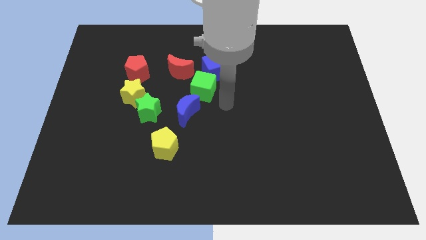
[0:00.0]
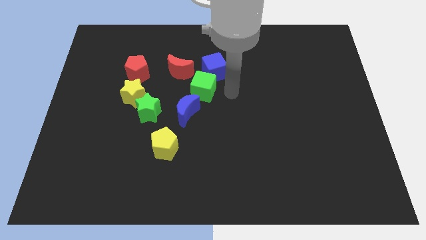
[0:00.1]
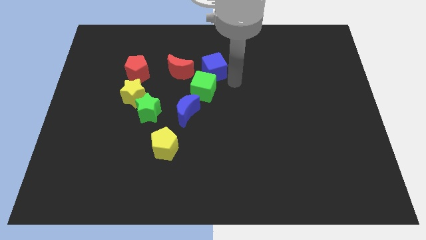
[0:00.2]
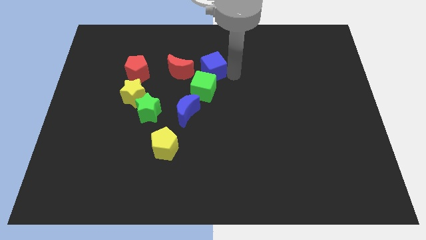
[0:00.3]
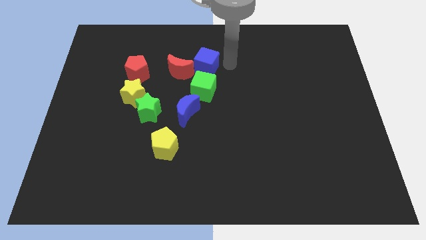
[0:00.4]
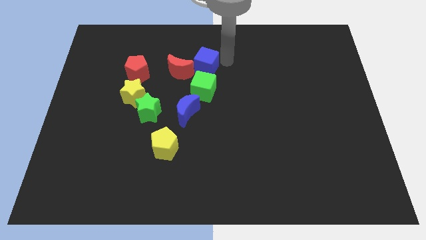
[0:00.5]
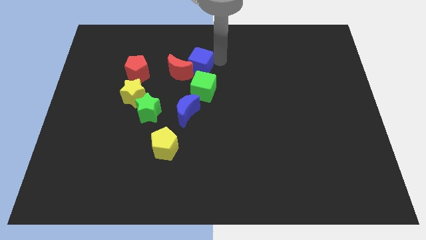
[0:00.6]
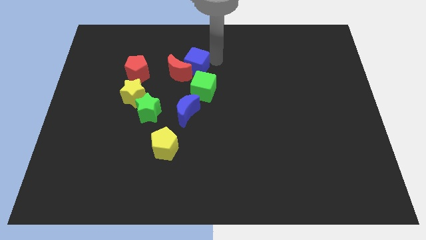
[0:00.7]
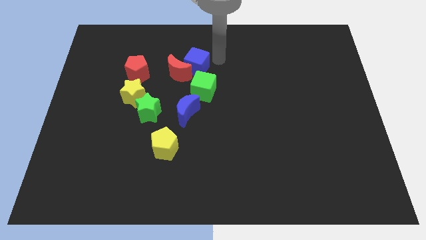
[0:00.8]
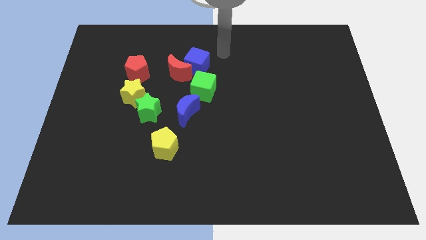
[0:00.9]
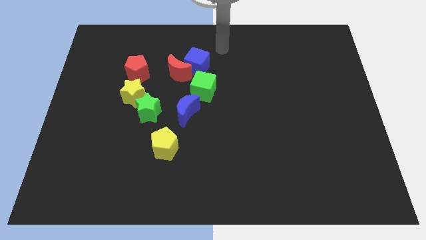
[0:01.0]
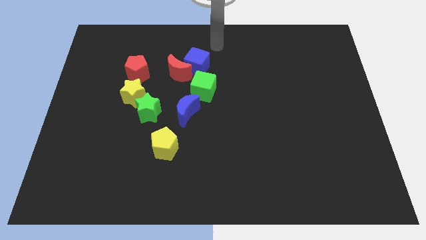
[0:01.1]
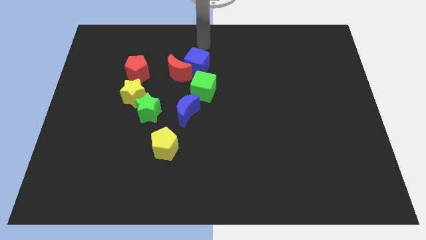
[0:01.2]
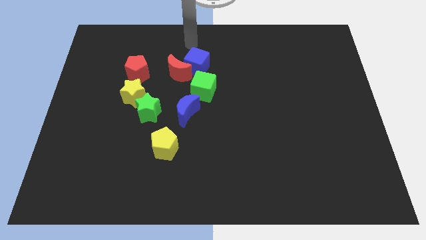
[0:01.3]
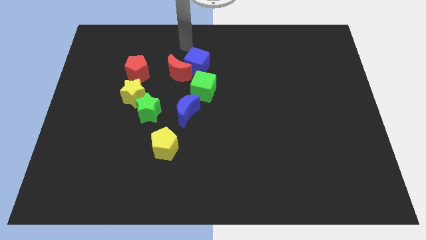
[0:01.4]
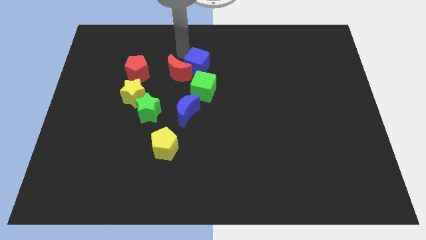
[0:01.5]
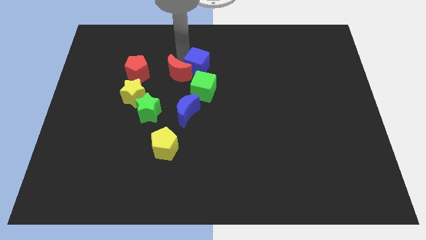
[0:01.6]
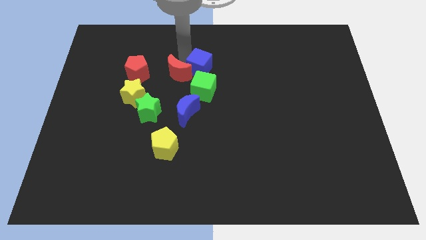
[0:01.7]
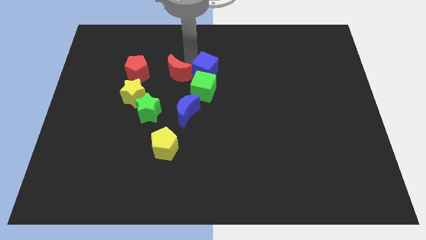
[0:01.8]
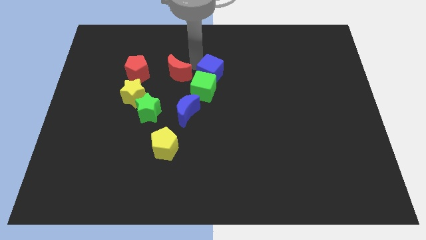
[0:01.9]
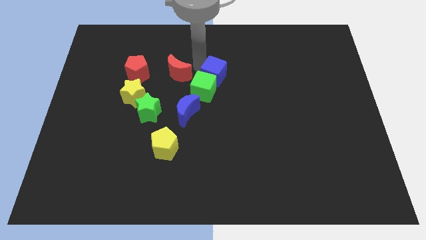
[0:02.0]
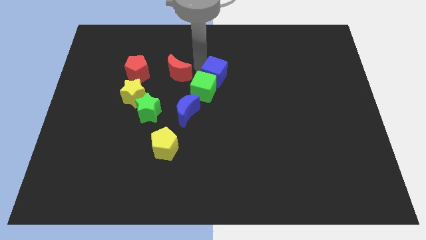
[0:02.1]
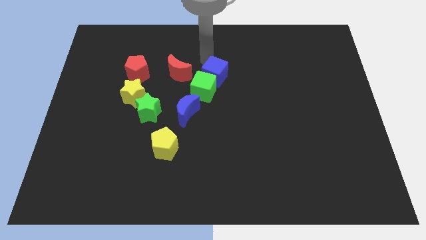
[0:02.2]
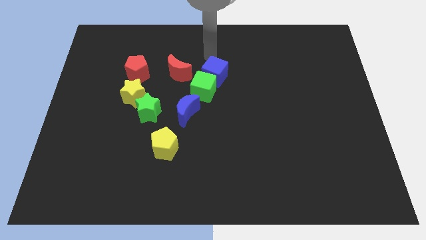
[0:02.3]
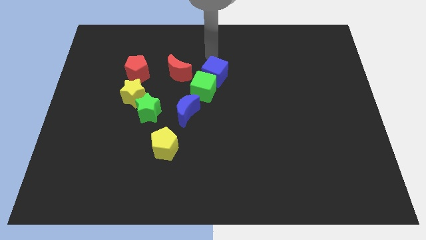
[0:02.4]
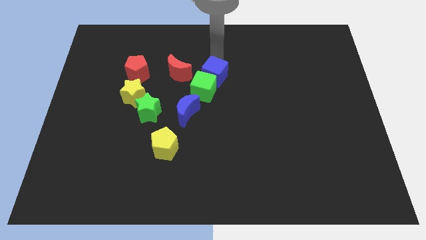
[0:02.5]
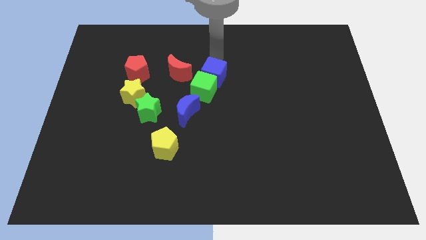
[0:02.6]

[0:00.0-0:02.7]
adjust blue cube above green cube

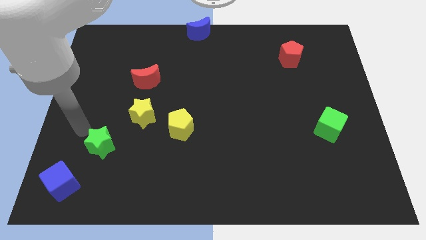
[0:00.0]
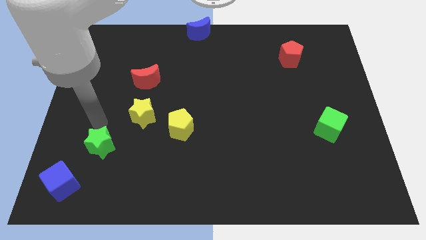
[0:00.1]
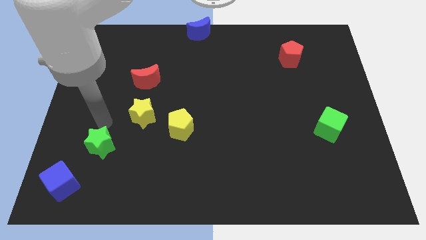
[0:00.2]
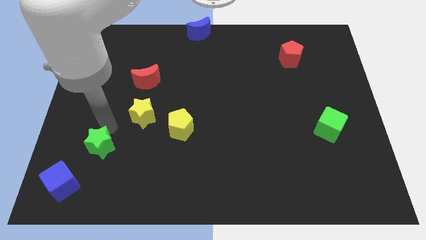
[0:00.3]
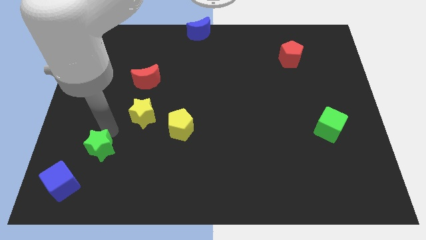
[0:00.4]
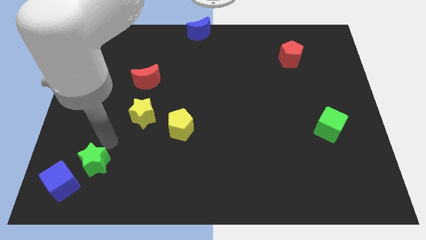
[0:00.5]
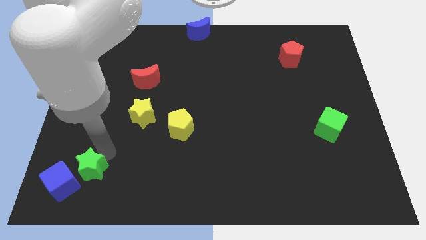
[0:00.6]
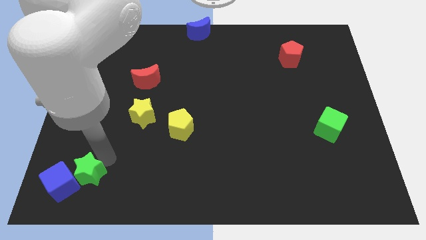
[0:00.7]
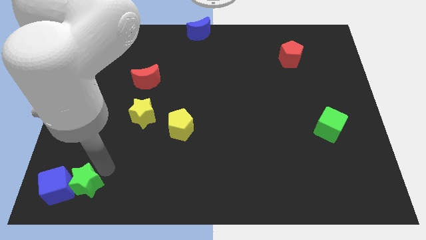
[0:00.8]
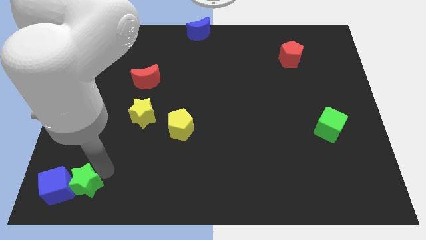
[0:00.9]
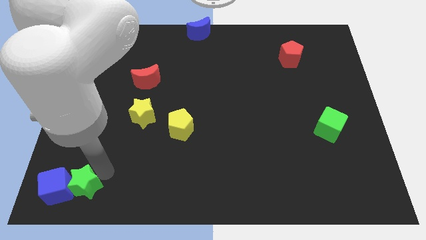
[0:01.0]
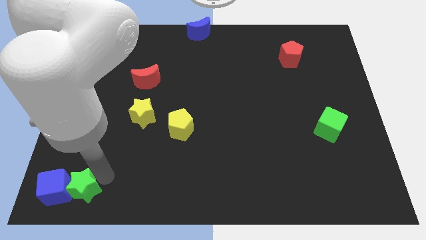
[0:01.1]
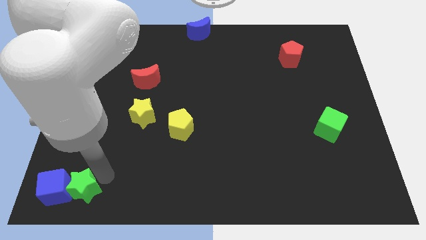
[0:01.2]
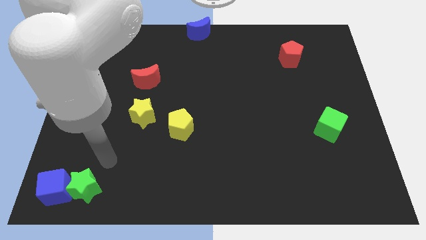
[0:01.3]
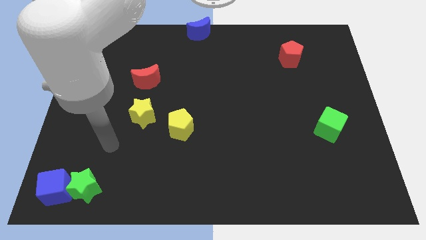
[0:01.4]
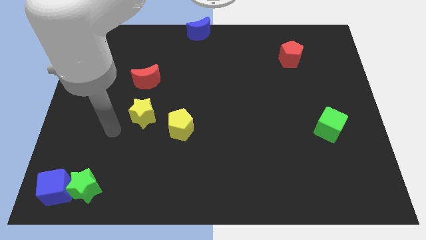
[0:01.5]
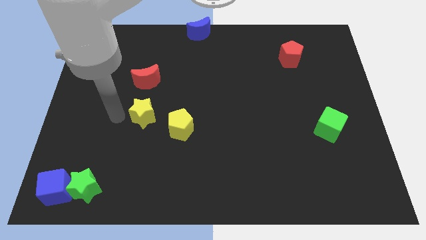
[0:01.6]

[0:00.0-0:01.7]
place green star to the bottom left corner of the board

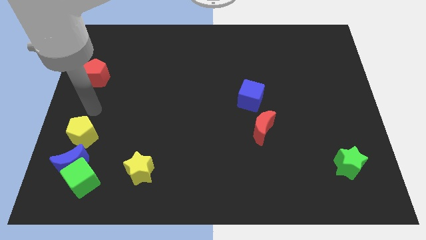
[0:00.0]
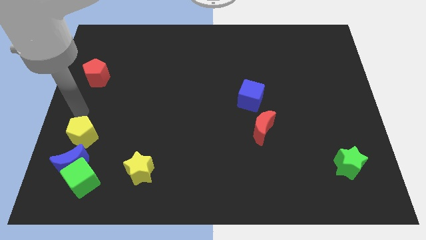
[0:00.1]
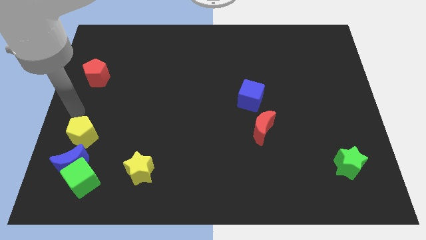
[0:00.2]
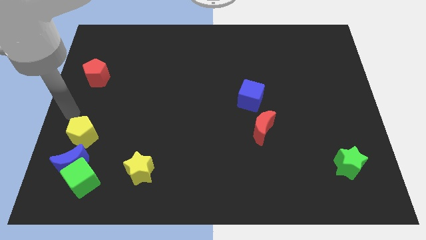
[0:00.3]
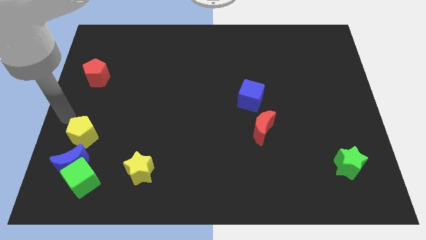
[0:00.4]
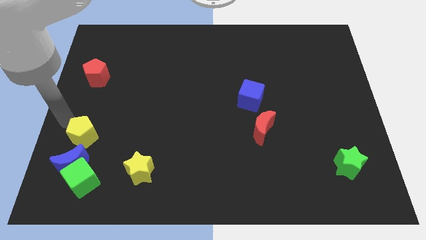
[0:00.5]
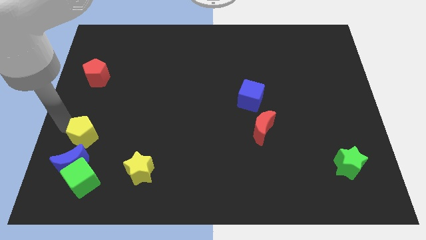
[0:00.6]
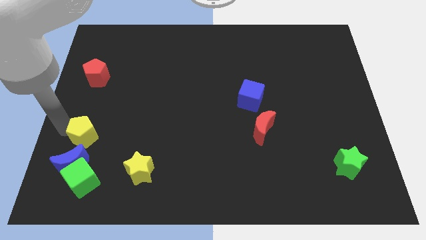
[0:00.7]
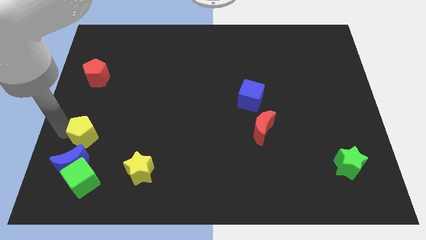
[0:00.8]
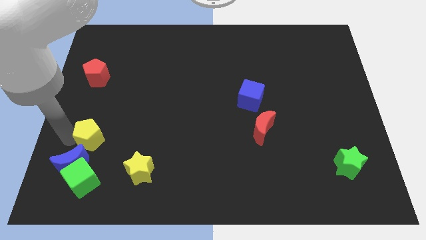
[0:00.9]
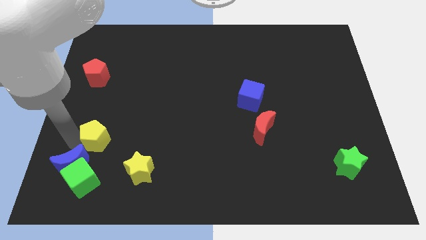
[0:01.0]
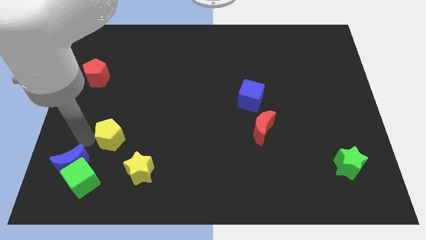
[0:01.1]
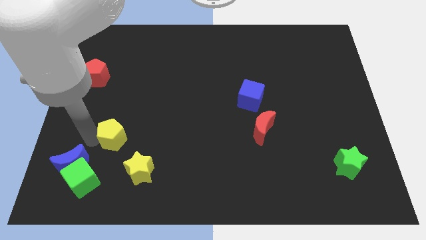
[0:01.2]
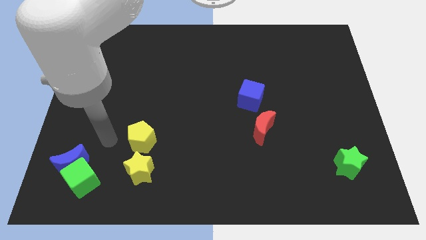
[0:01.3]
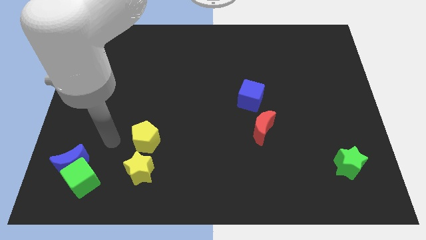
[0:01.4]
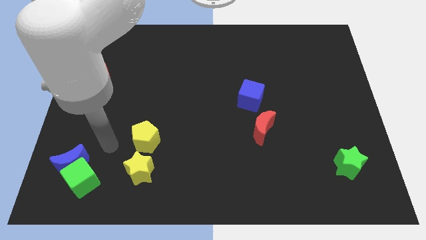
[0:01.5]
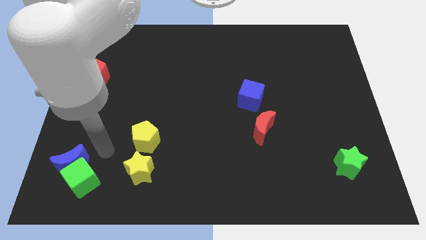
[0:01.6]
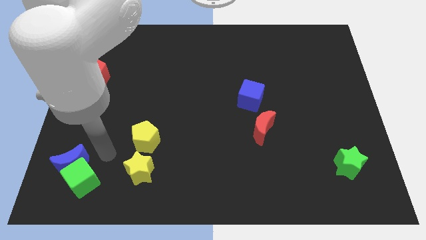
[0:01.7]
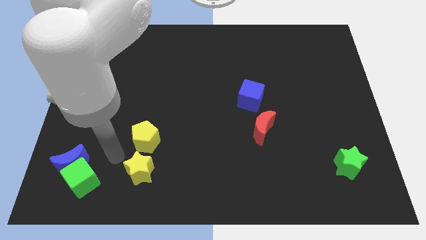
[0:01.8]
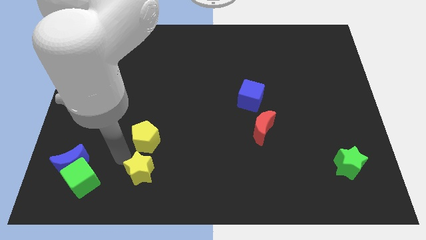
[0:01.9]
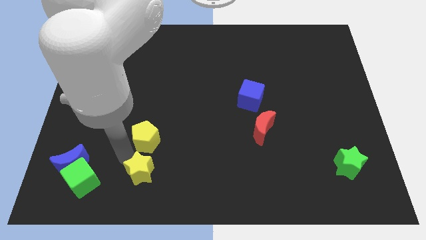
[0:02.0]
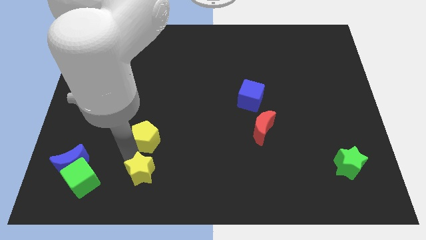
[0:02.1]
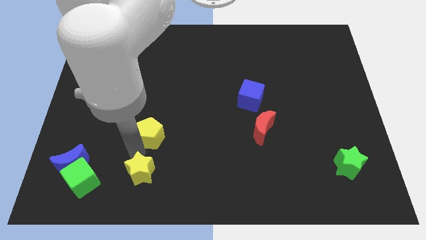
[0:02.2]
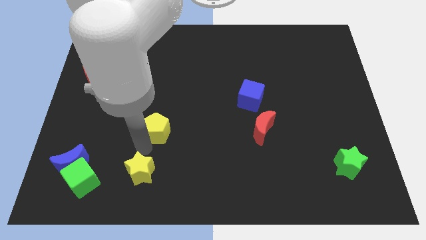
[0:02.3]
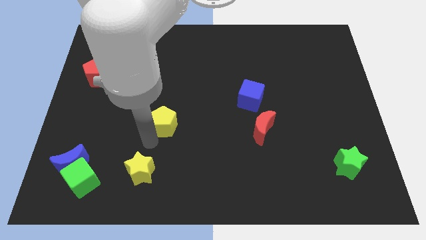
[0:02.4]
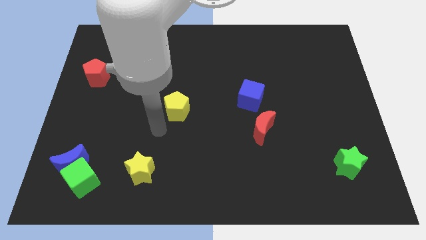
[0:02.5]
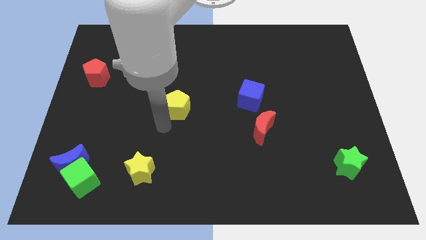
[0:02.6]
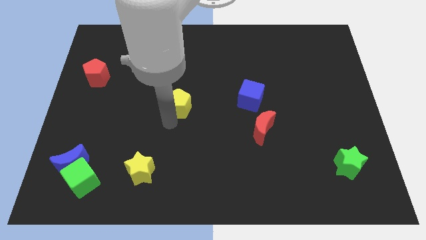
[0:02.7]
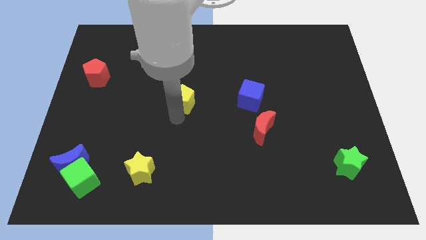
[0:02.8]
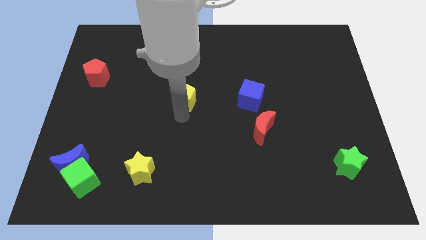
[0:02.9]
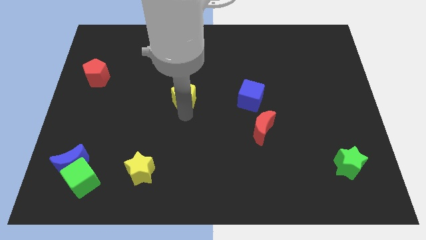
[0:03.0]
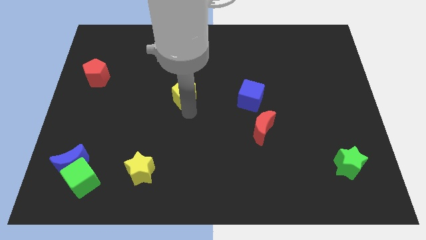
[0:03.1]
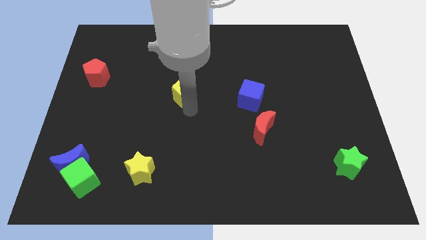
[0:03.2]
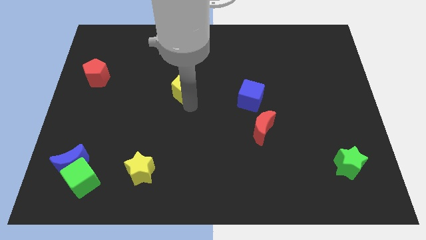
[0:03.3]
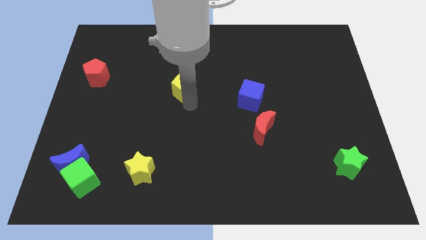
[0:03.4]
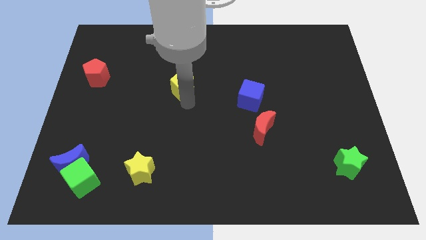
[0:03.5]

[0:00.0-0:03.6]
move the yellow pentagon to the left side of the blue cube

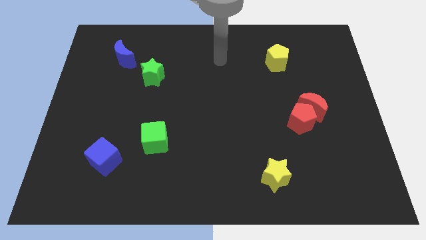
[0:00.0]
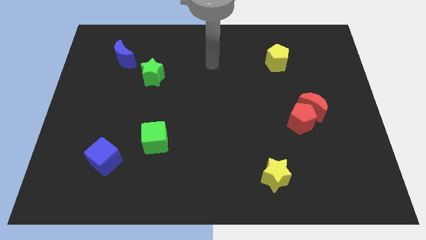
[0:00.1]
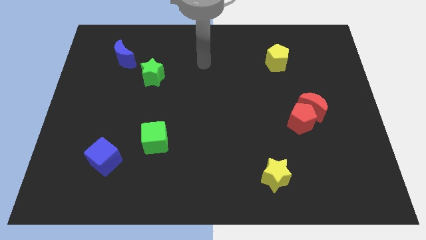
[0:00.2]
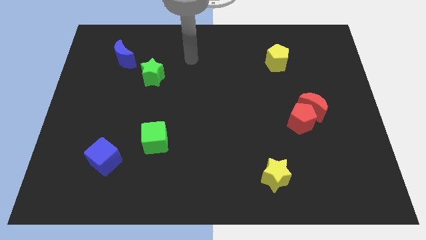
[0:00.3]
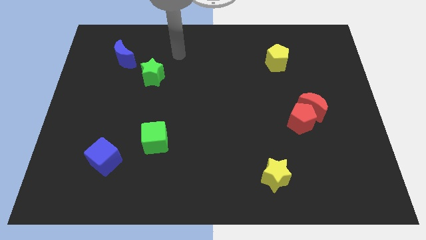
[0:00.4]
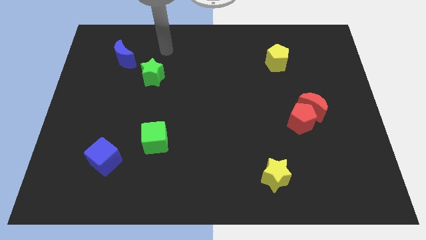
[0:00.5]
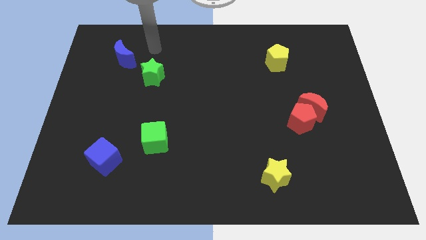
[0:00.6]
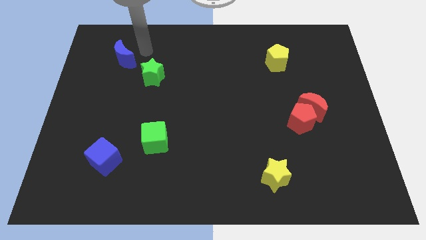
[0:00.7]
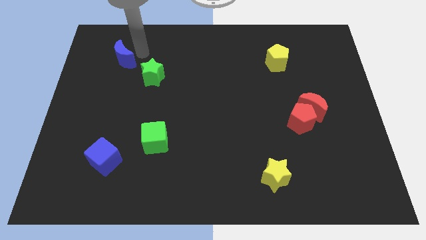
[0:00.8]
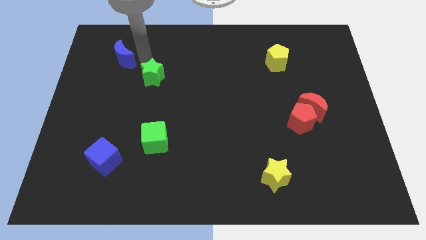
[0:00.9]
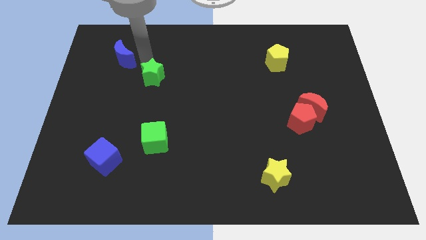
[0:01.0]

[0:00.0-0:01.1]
move your arm towards the yellow star
